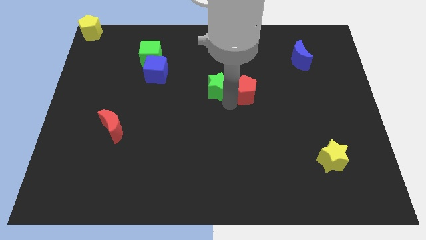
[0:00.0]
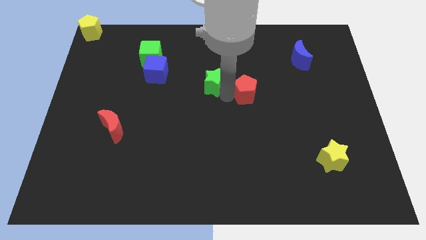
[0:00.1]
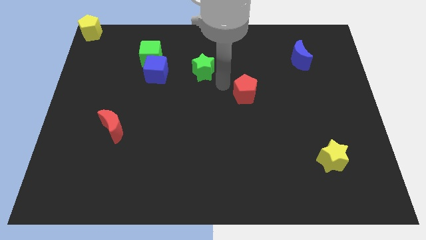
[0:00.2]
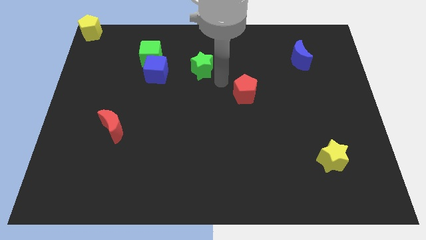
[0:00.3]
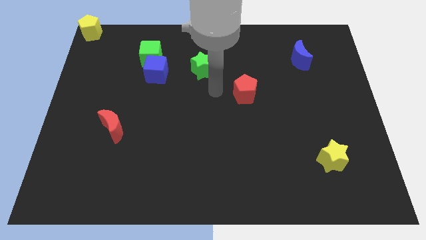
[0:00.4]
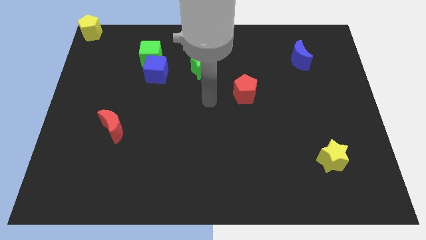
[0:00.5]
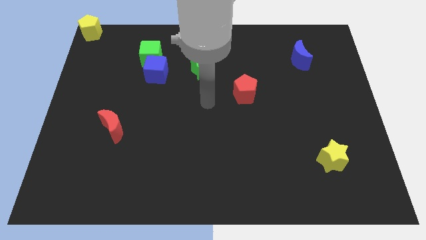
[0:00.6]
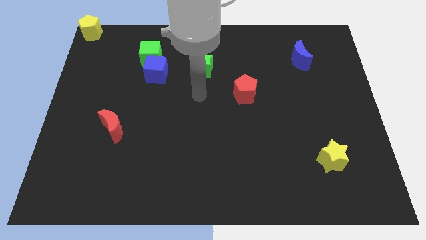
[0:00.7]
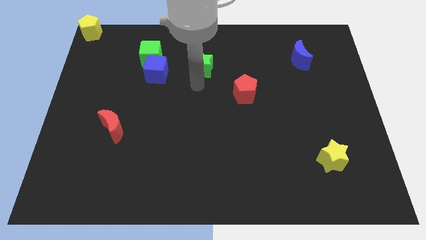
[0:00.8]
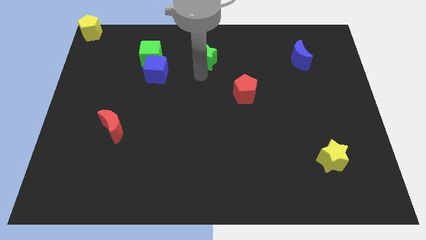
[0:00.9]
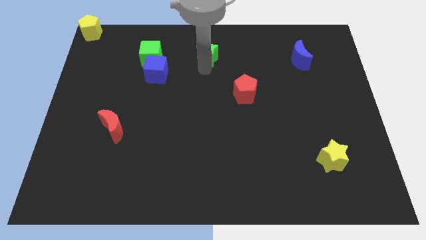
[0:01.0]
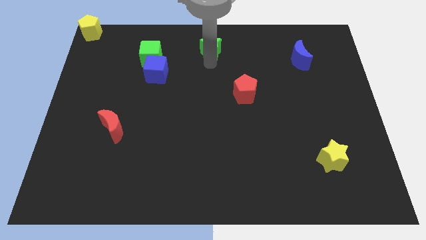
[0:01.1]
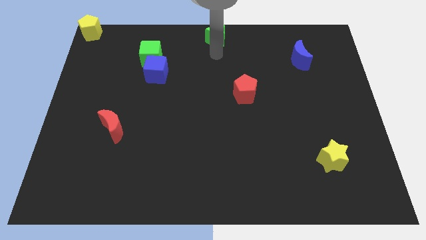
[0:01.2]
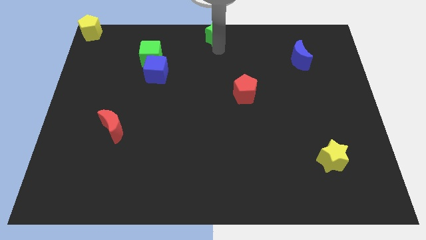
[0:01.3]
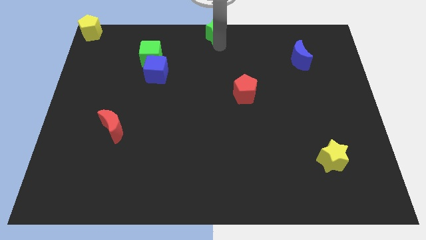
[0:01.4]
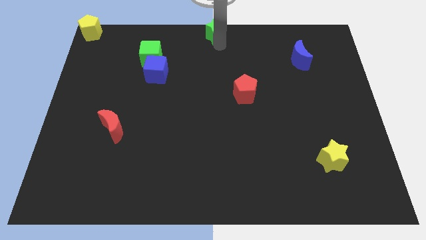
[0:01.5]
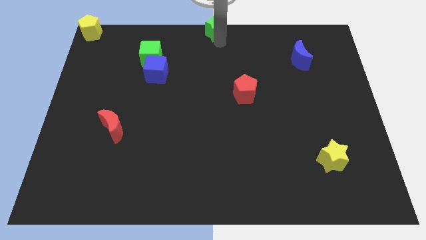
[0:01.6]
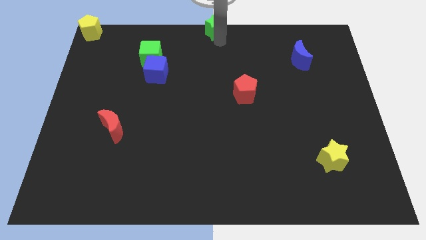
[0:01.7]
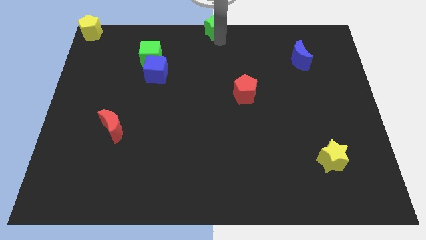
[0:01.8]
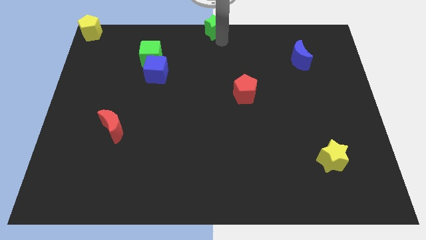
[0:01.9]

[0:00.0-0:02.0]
move the green star to the top center

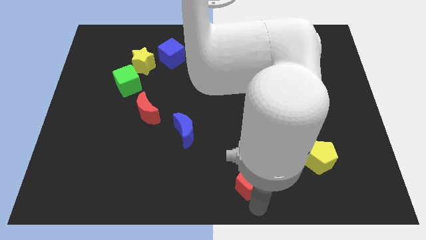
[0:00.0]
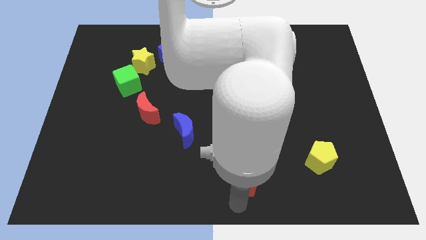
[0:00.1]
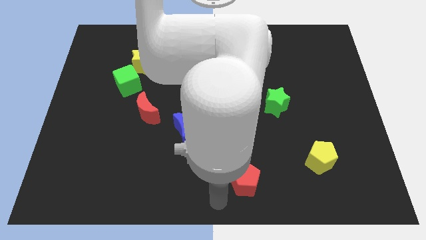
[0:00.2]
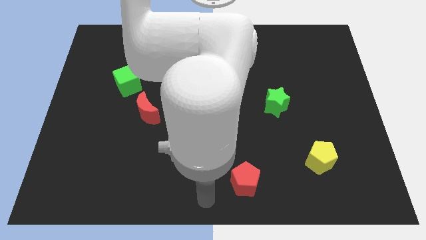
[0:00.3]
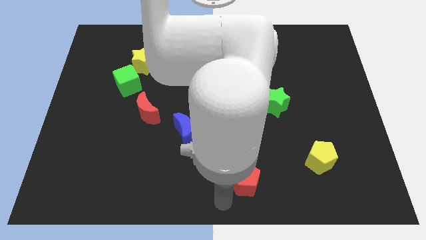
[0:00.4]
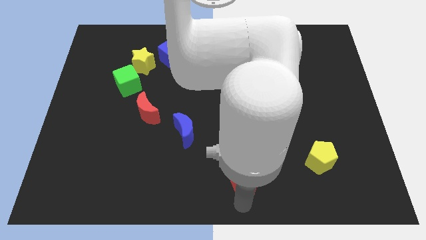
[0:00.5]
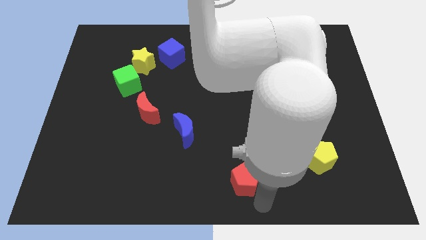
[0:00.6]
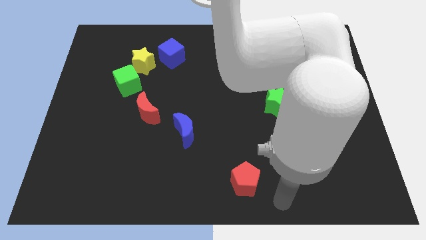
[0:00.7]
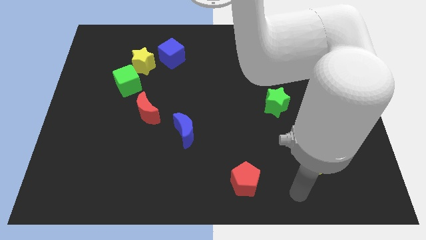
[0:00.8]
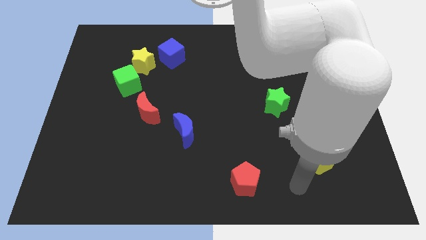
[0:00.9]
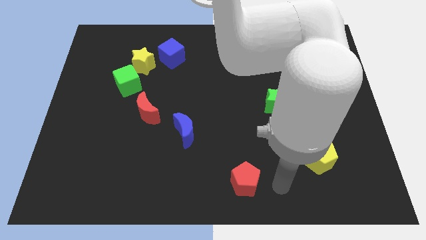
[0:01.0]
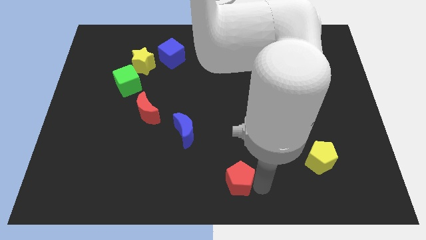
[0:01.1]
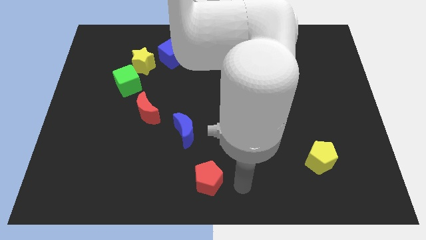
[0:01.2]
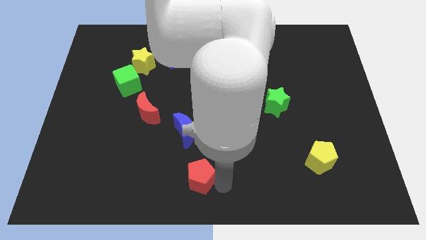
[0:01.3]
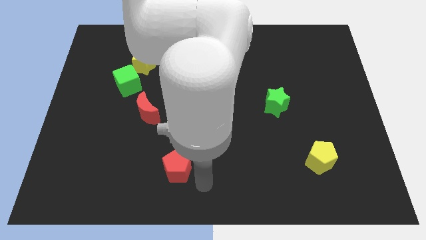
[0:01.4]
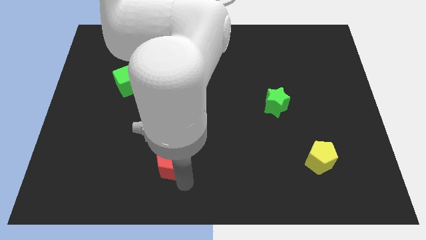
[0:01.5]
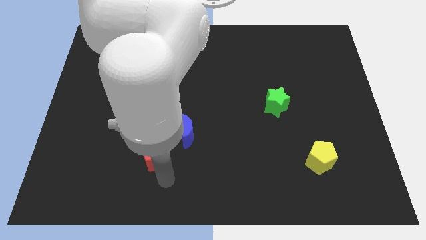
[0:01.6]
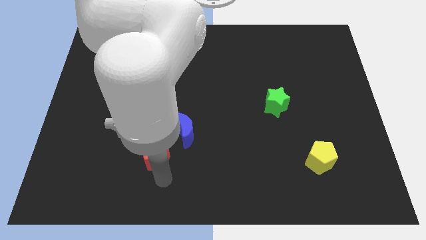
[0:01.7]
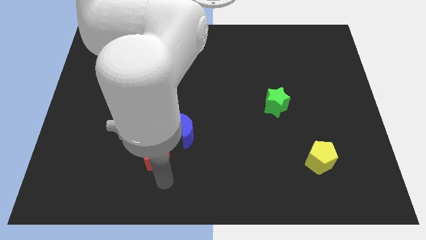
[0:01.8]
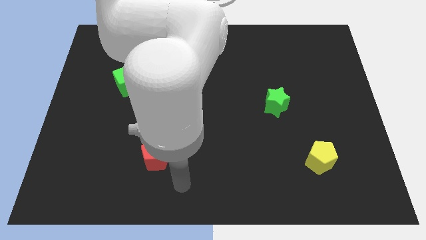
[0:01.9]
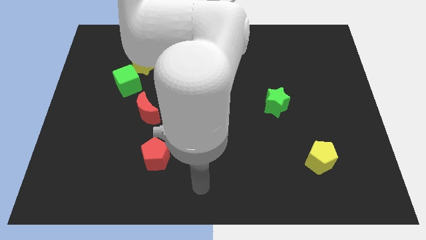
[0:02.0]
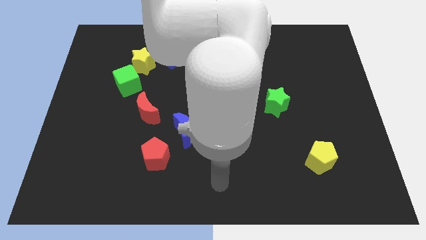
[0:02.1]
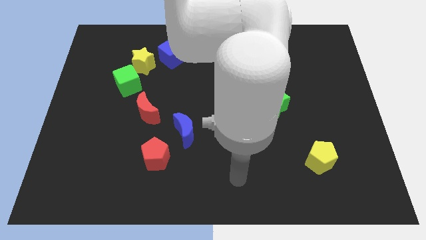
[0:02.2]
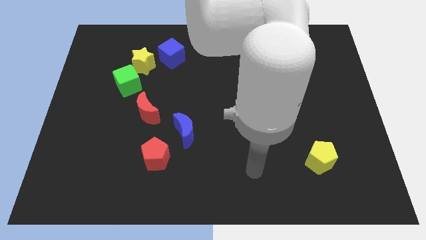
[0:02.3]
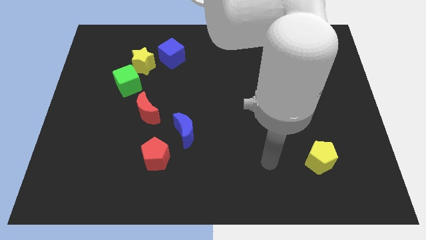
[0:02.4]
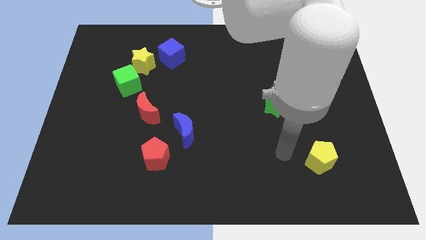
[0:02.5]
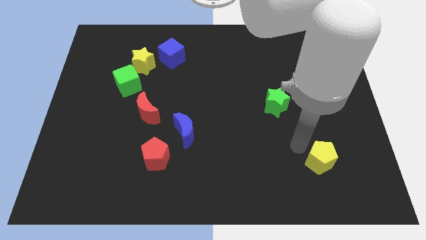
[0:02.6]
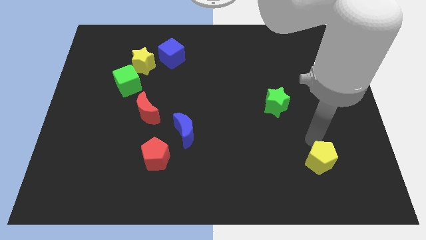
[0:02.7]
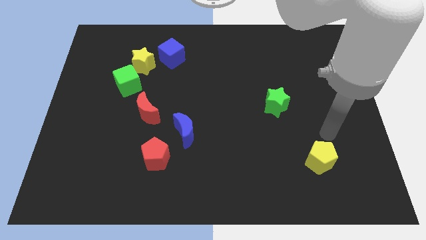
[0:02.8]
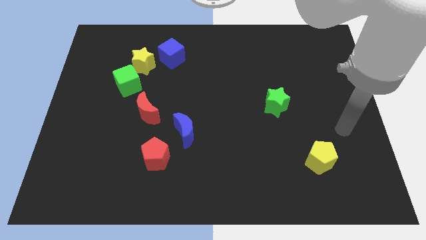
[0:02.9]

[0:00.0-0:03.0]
move the red pentagon to the bottom of the red crescent

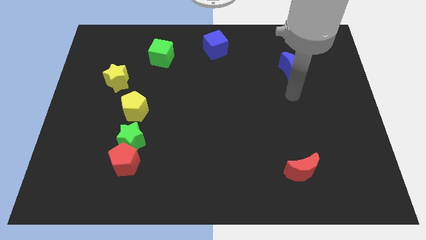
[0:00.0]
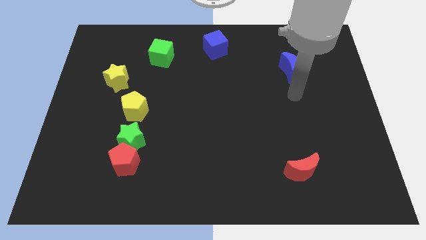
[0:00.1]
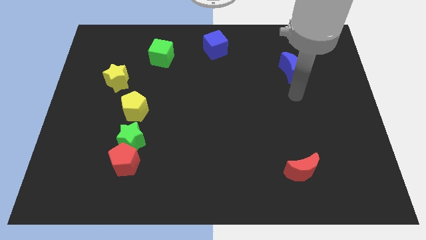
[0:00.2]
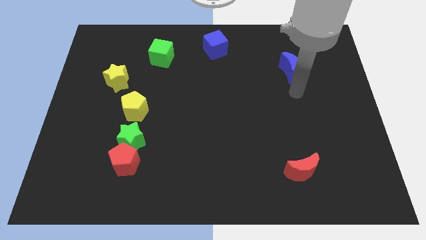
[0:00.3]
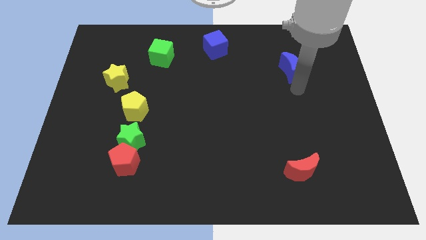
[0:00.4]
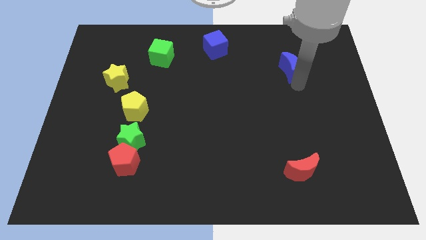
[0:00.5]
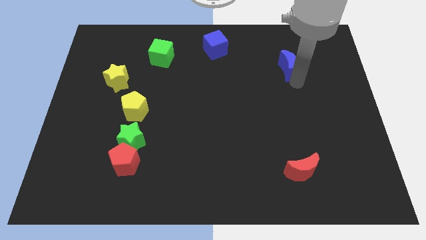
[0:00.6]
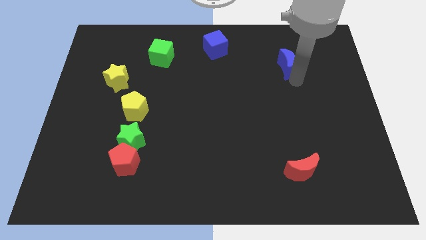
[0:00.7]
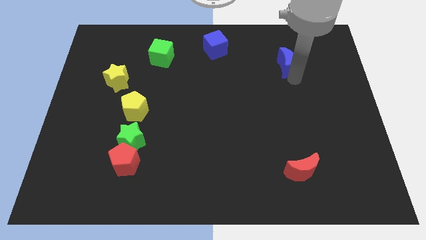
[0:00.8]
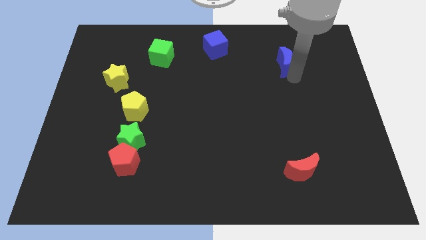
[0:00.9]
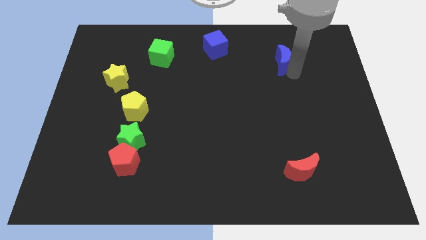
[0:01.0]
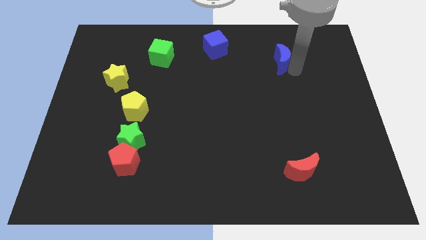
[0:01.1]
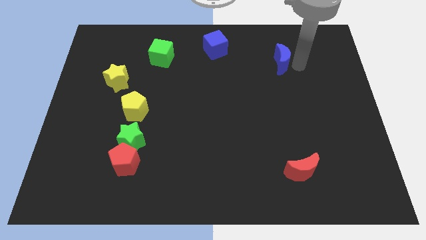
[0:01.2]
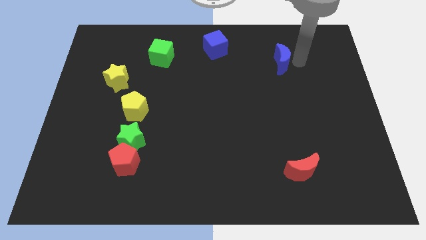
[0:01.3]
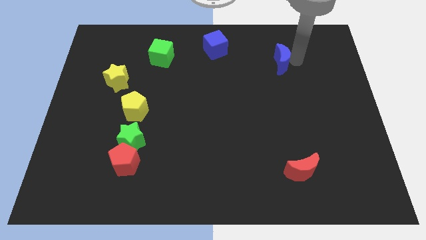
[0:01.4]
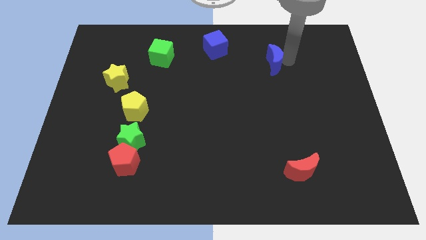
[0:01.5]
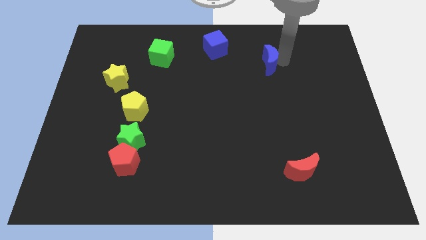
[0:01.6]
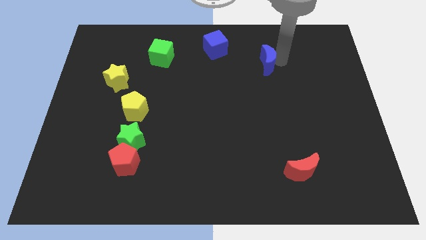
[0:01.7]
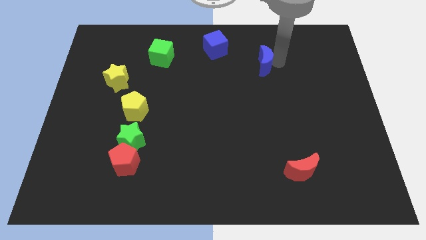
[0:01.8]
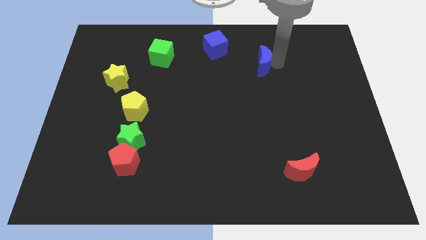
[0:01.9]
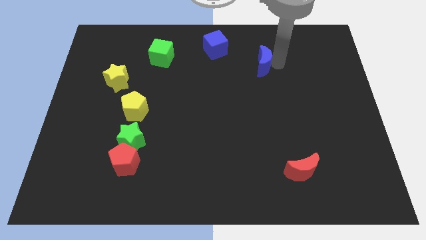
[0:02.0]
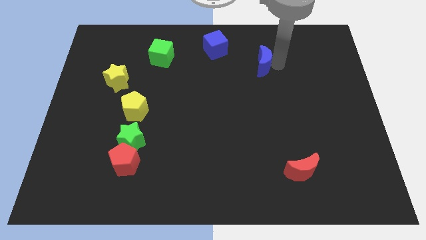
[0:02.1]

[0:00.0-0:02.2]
drag blue moon towards left side of the board

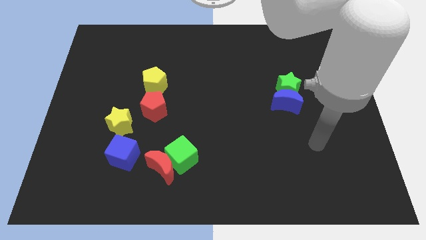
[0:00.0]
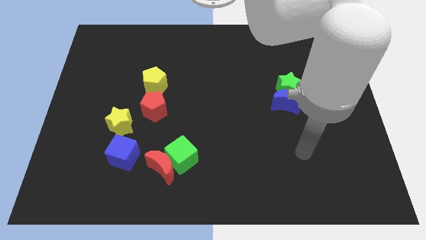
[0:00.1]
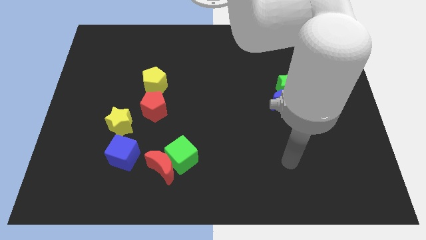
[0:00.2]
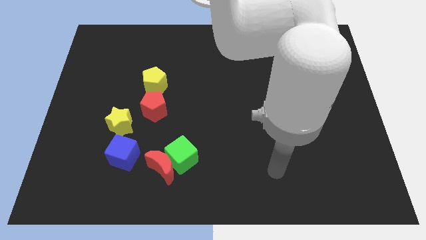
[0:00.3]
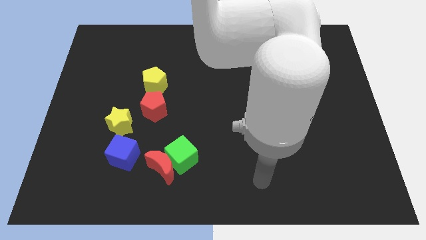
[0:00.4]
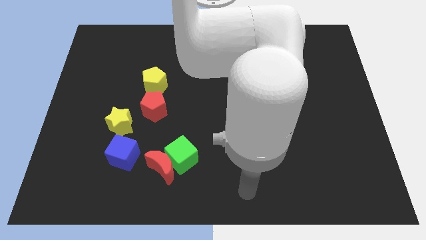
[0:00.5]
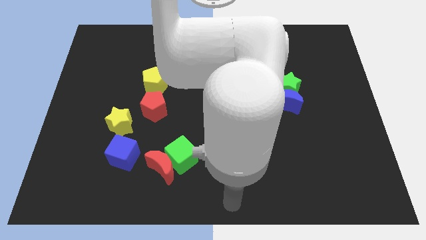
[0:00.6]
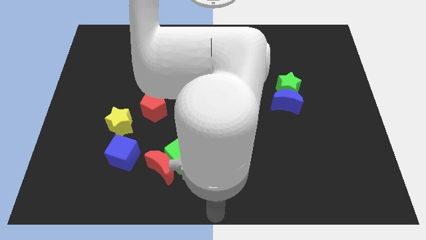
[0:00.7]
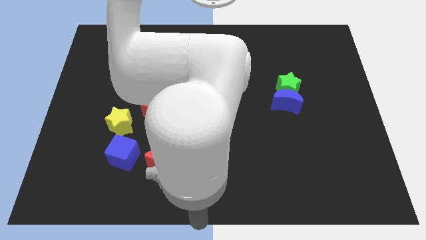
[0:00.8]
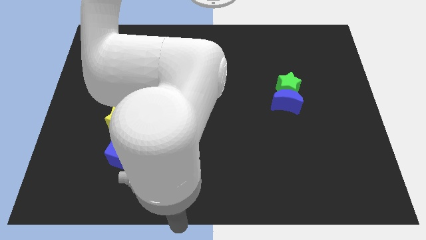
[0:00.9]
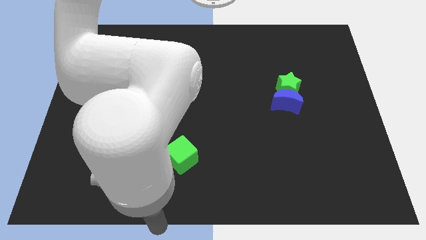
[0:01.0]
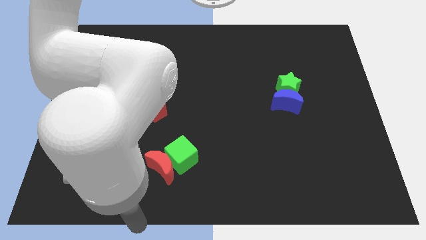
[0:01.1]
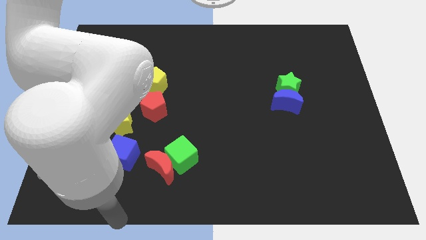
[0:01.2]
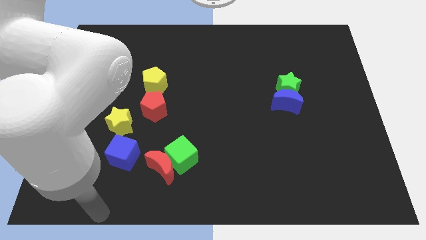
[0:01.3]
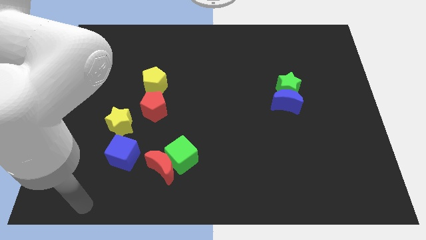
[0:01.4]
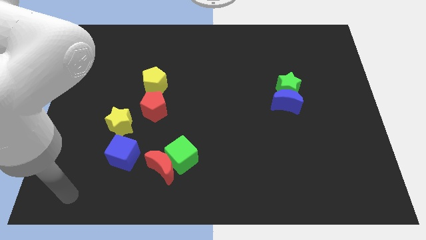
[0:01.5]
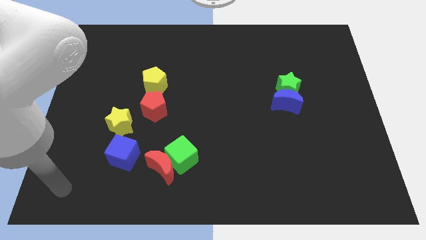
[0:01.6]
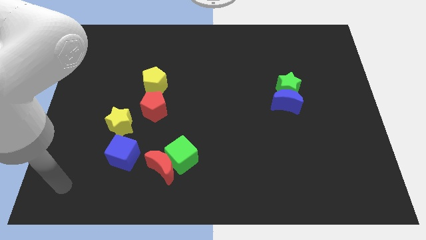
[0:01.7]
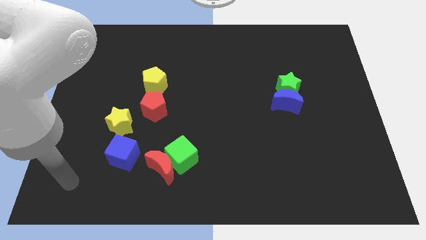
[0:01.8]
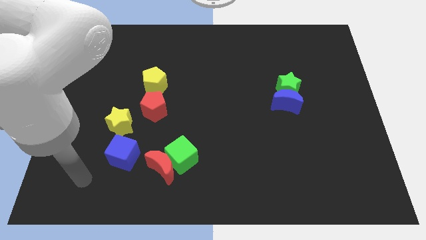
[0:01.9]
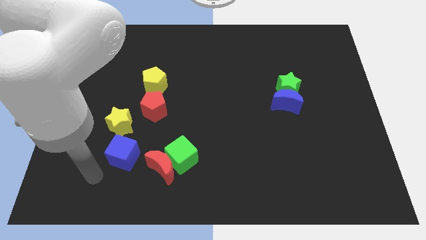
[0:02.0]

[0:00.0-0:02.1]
point your arm to the bottom left of the blue cube
